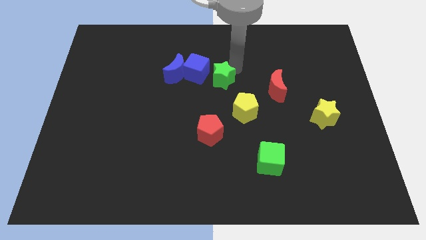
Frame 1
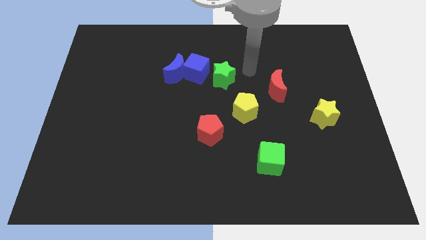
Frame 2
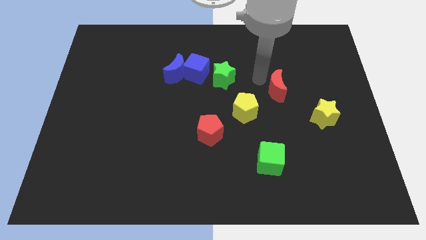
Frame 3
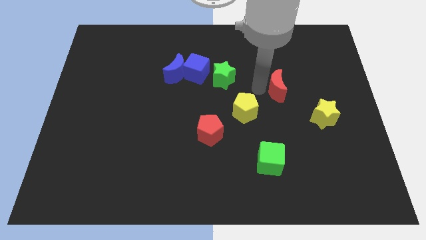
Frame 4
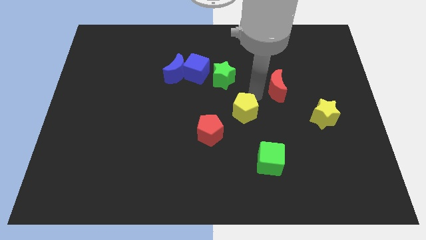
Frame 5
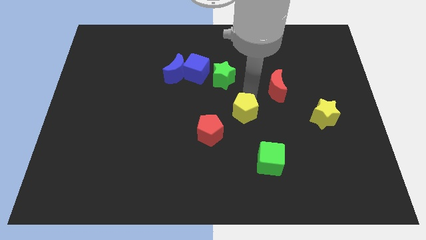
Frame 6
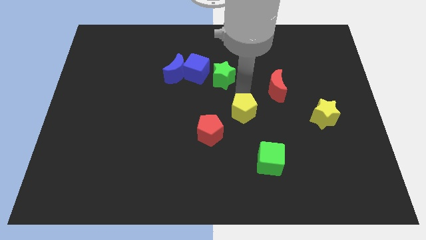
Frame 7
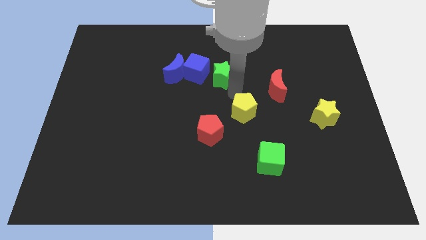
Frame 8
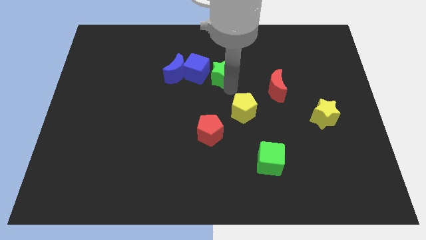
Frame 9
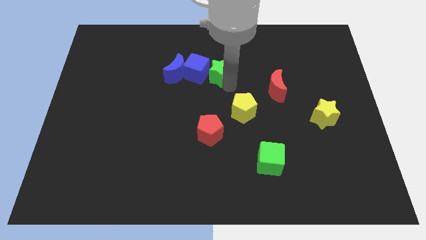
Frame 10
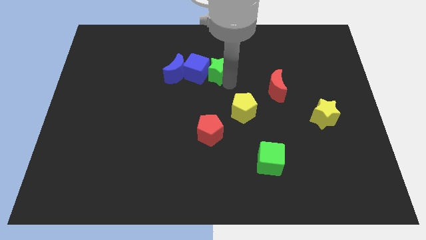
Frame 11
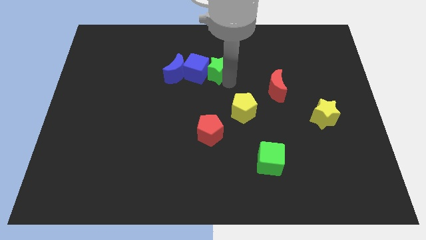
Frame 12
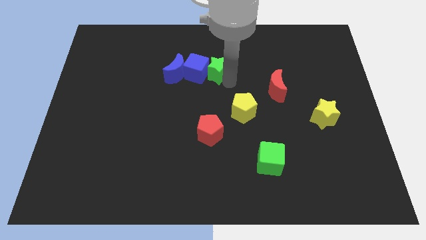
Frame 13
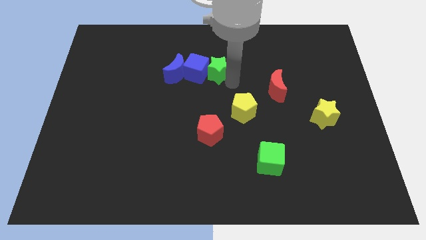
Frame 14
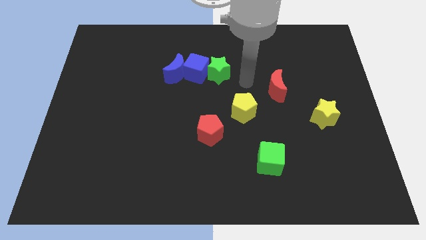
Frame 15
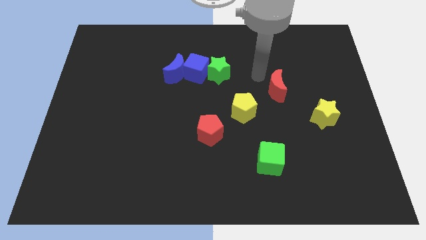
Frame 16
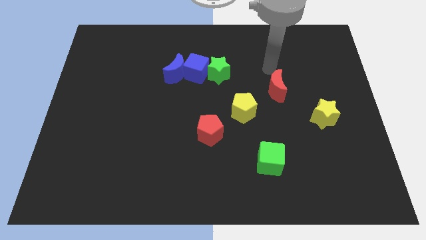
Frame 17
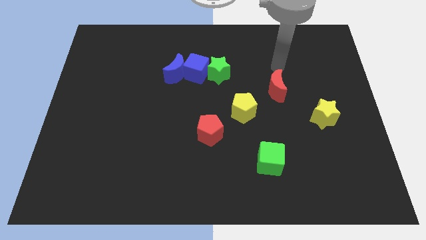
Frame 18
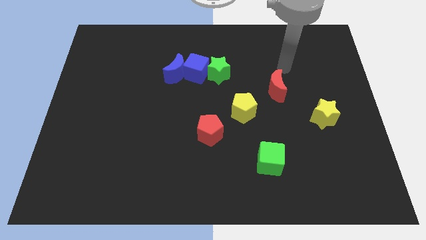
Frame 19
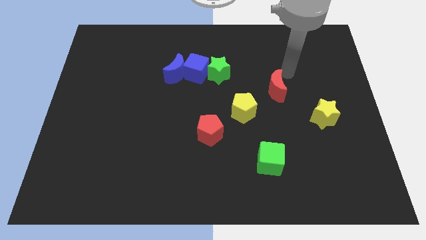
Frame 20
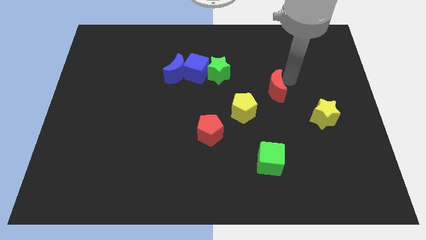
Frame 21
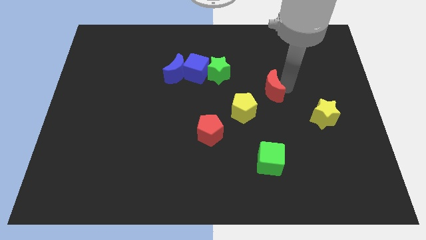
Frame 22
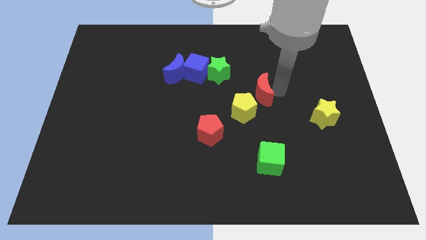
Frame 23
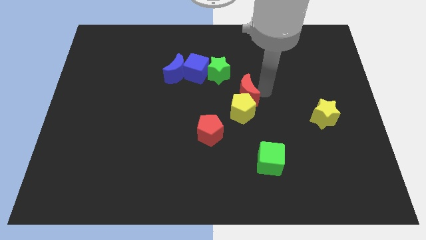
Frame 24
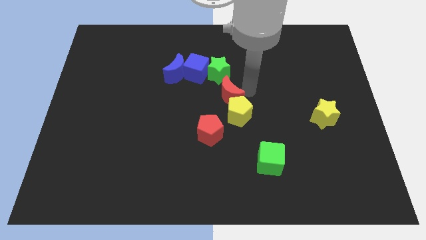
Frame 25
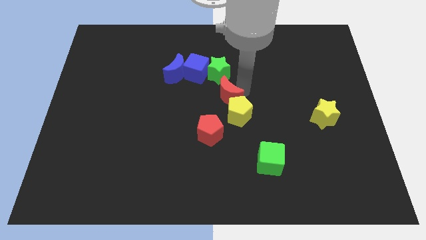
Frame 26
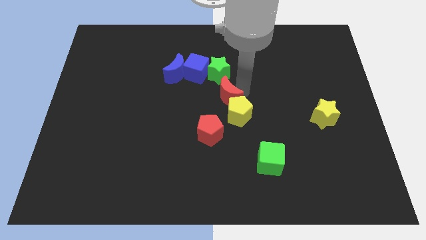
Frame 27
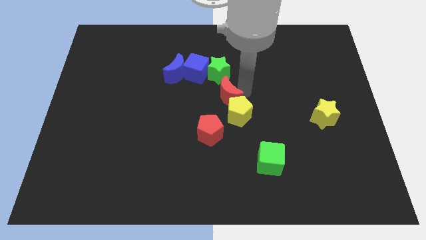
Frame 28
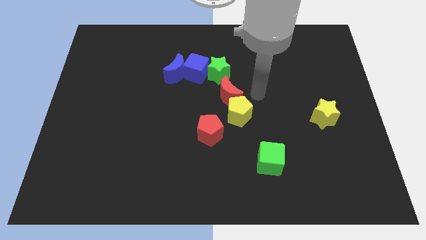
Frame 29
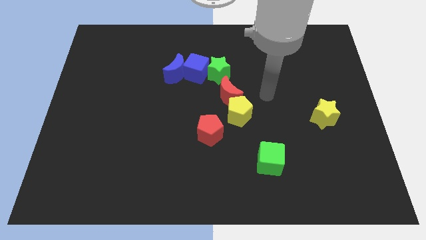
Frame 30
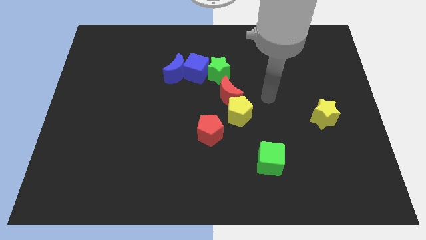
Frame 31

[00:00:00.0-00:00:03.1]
push the red moon into the yellow pentagon

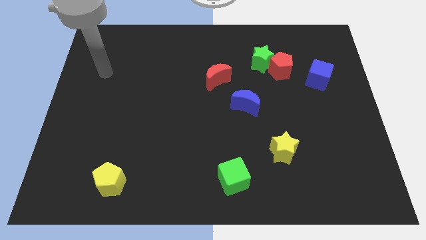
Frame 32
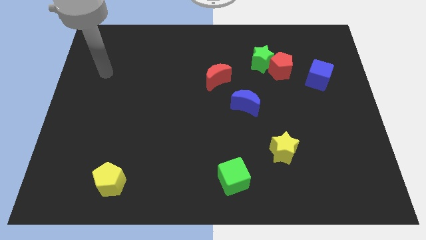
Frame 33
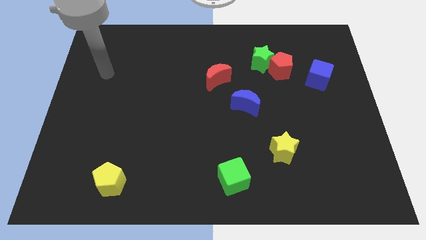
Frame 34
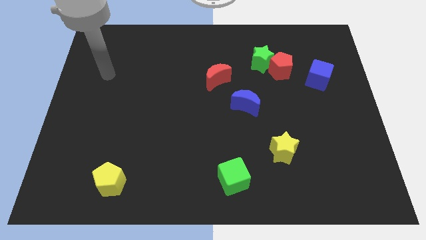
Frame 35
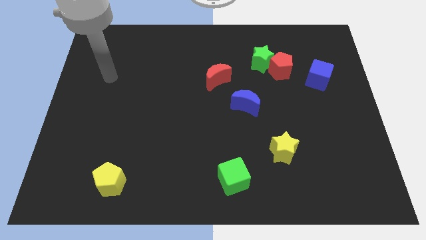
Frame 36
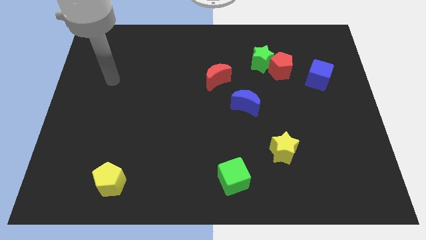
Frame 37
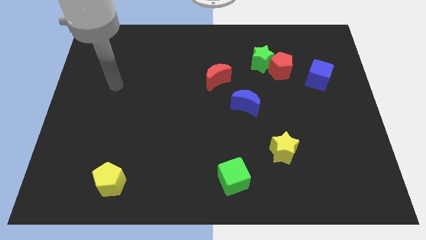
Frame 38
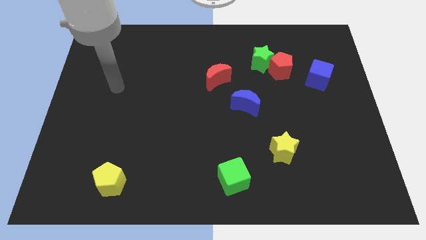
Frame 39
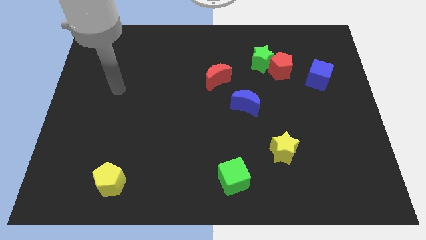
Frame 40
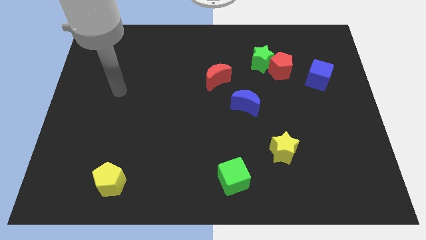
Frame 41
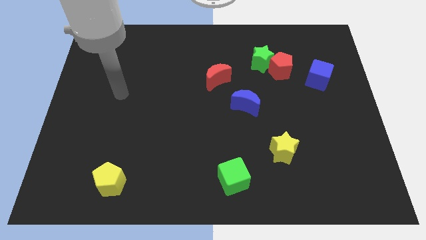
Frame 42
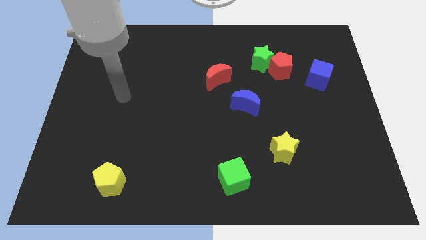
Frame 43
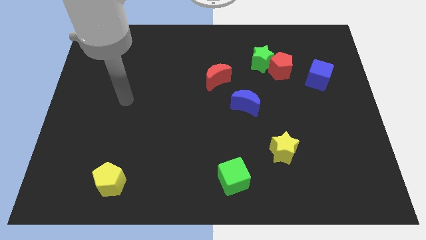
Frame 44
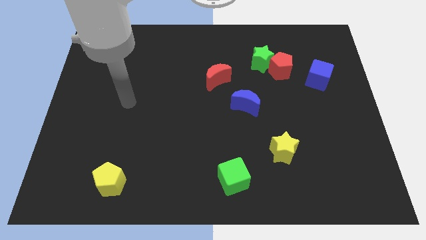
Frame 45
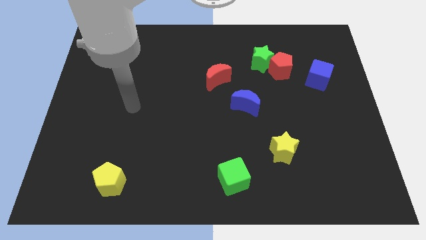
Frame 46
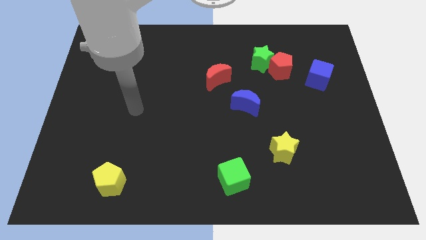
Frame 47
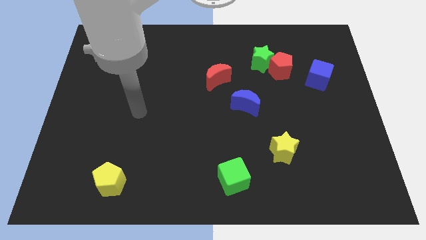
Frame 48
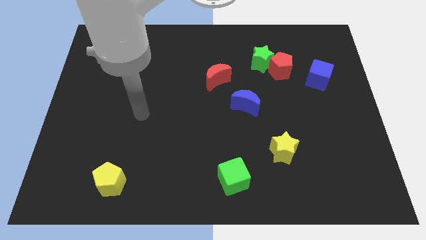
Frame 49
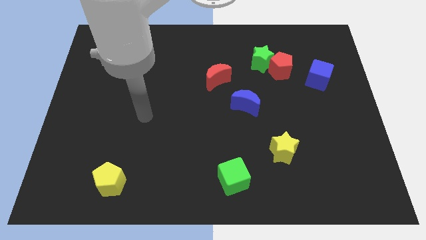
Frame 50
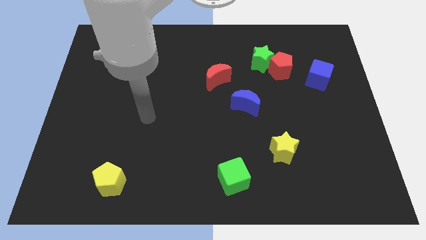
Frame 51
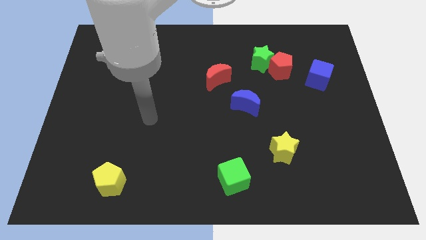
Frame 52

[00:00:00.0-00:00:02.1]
move your arm slightly towards the bottom side of the board

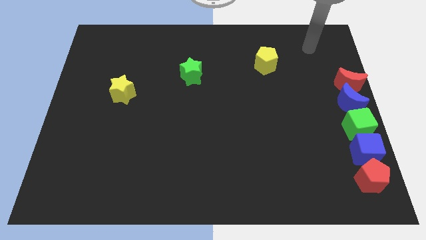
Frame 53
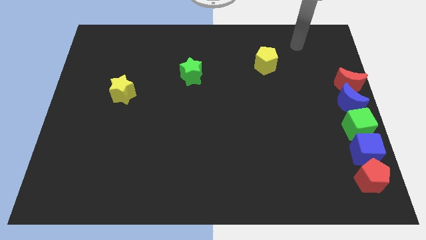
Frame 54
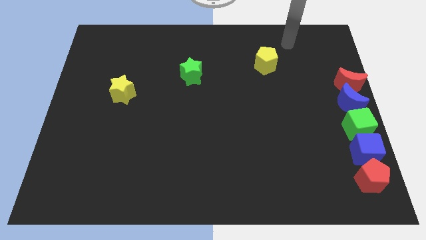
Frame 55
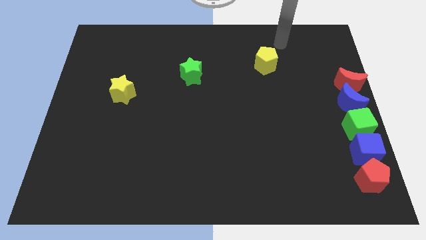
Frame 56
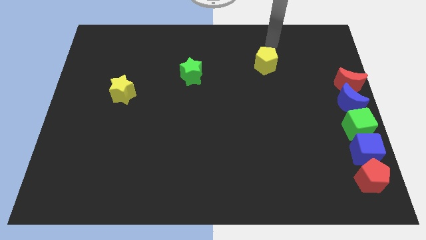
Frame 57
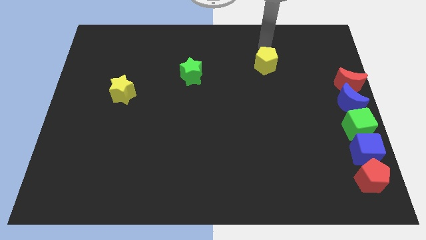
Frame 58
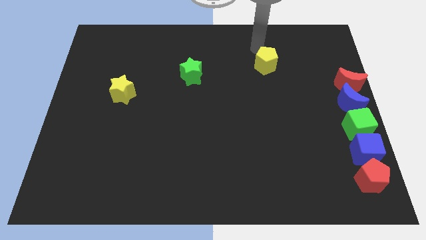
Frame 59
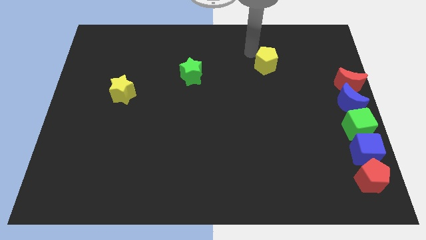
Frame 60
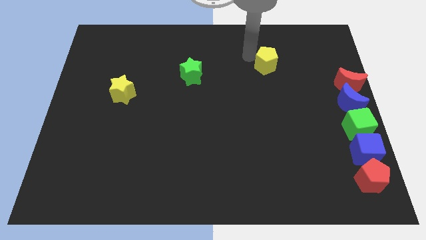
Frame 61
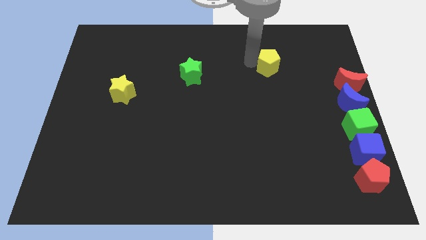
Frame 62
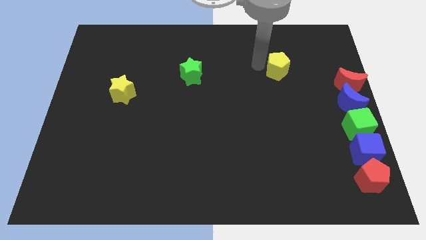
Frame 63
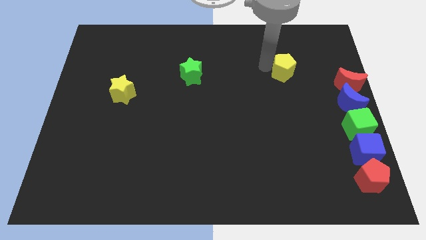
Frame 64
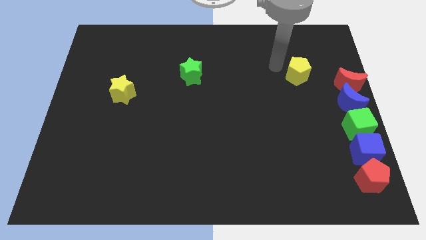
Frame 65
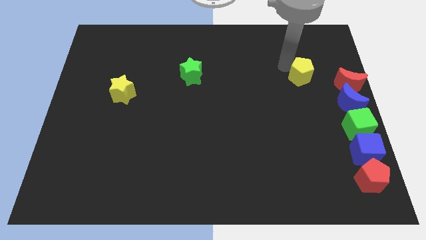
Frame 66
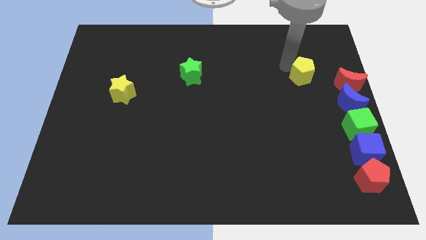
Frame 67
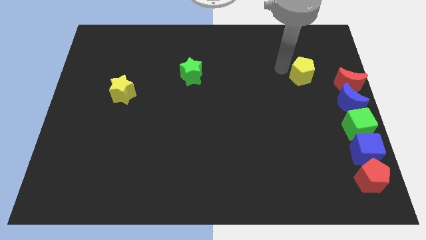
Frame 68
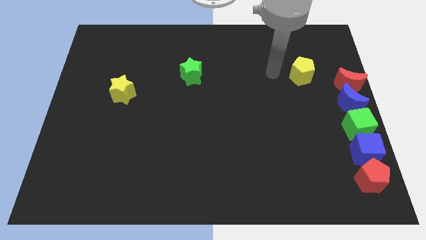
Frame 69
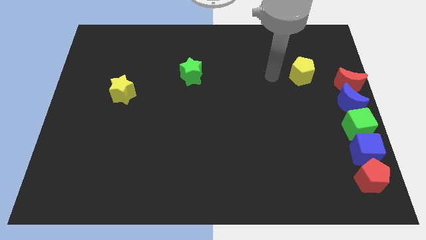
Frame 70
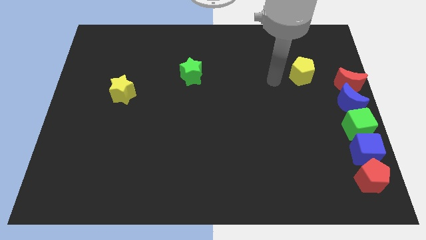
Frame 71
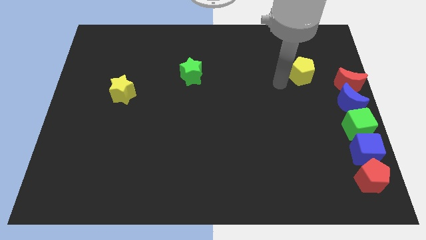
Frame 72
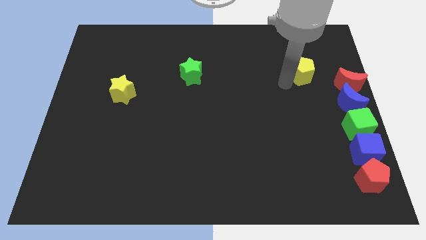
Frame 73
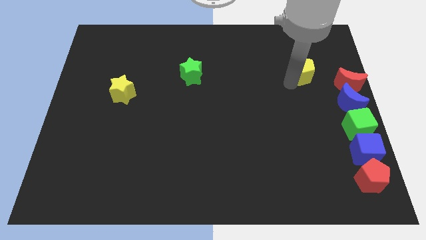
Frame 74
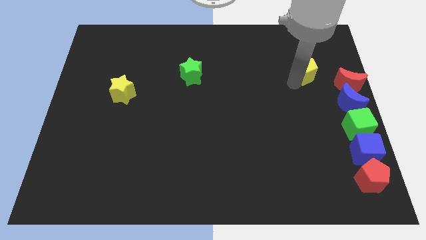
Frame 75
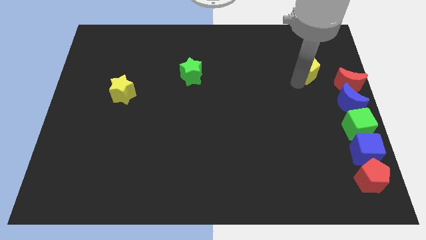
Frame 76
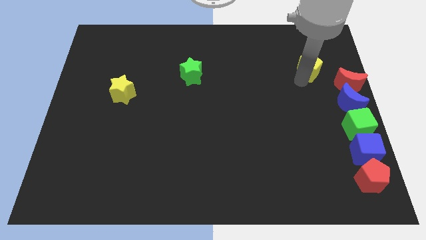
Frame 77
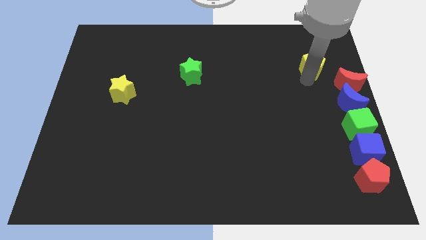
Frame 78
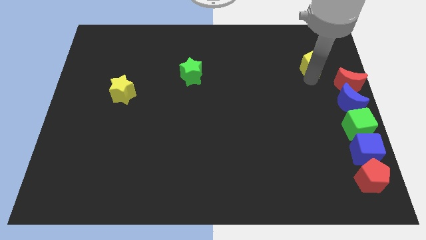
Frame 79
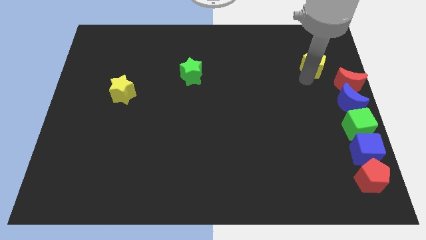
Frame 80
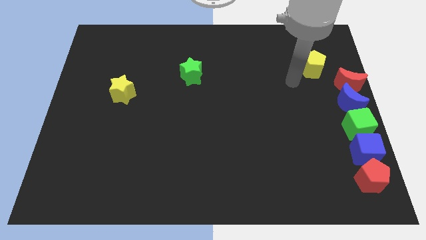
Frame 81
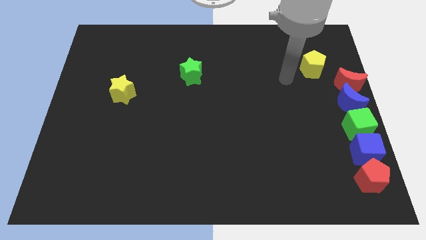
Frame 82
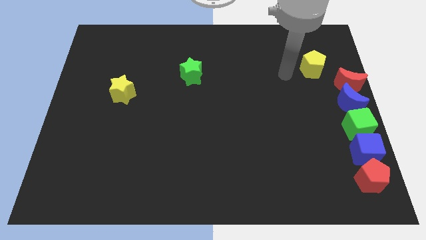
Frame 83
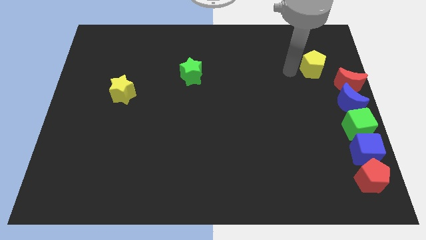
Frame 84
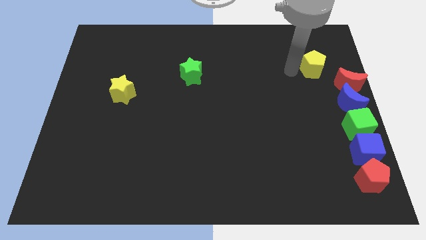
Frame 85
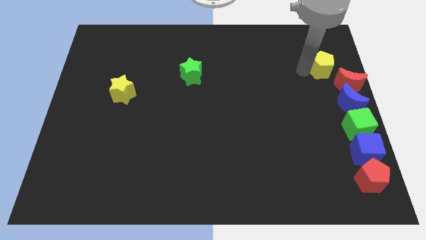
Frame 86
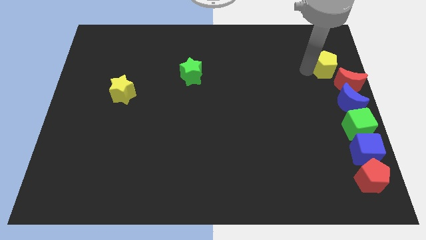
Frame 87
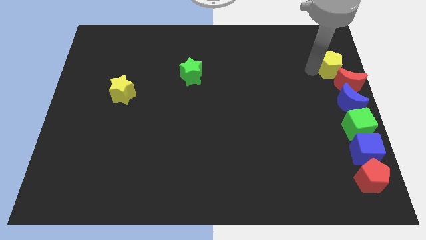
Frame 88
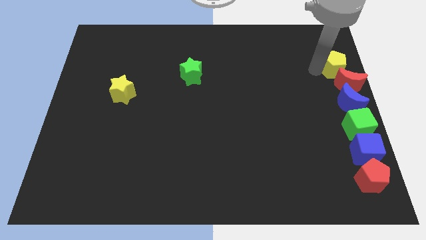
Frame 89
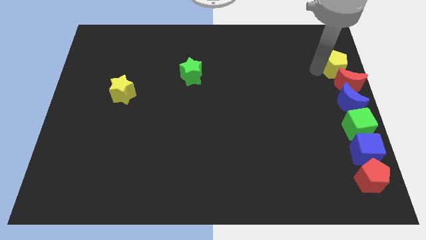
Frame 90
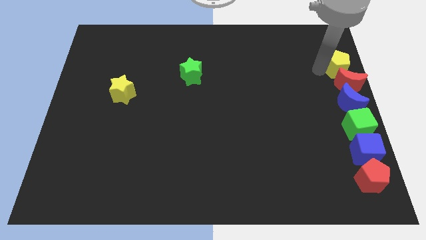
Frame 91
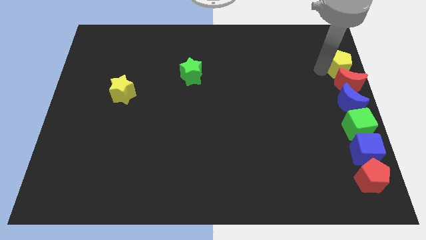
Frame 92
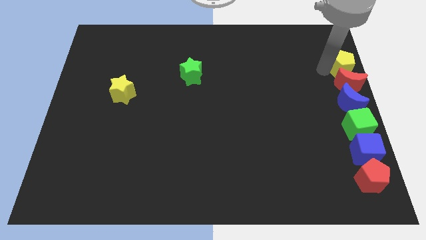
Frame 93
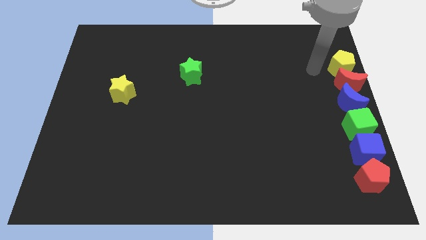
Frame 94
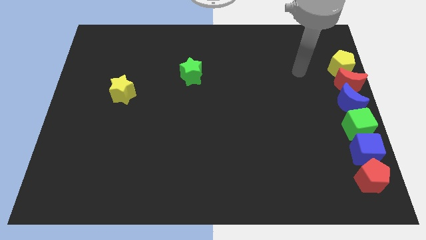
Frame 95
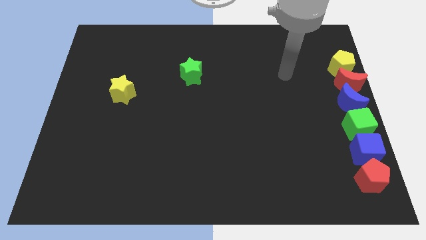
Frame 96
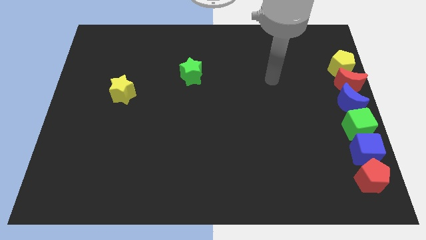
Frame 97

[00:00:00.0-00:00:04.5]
place the yellow pentagon at the top of the red crescent to form a vertical line of blocks
